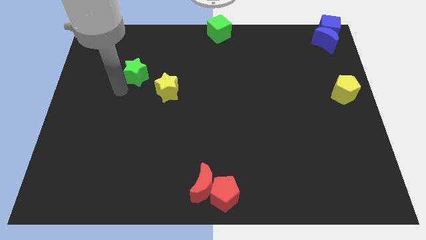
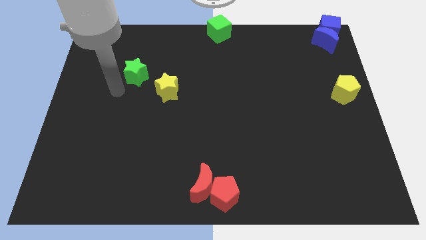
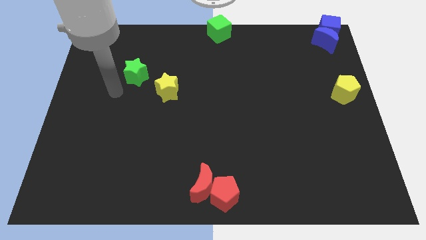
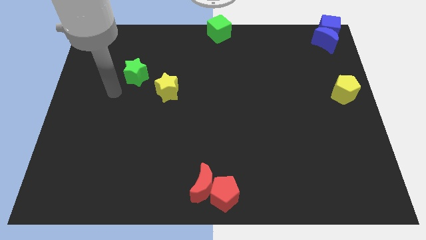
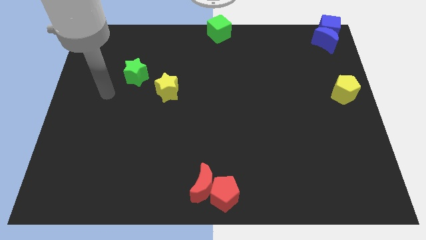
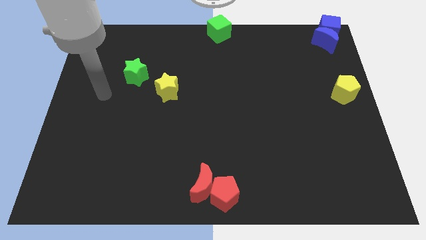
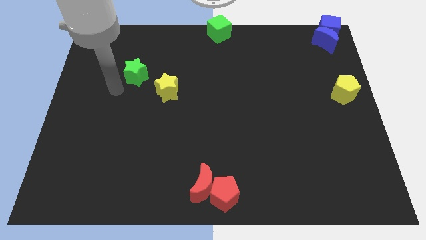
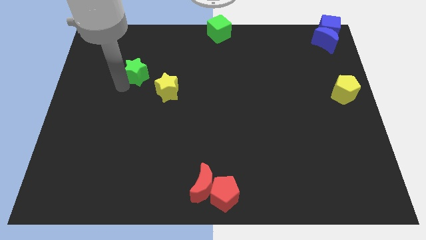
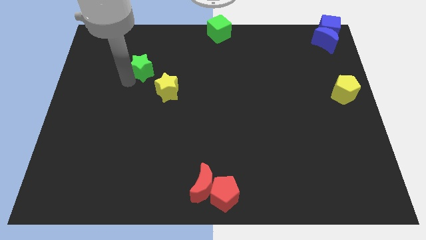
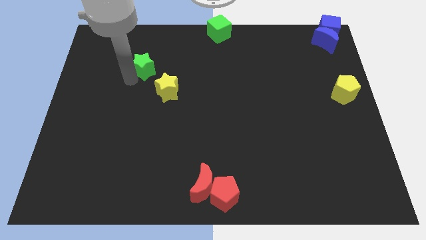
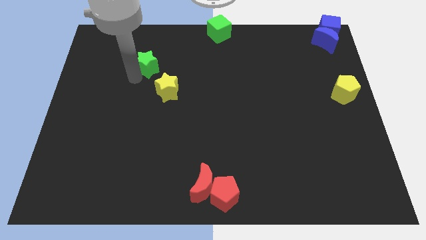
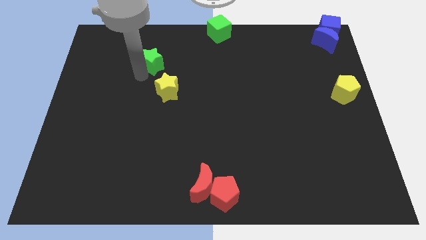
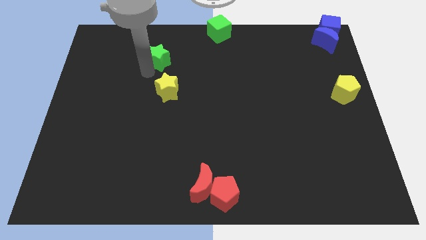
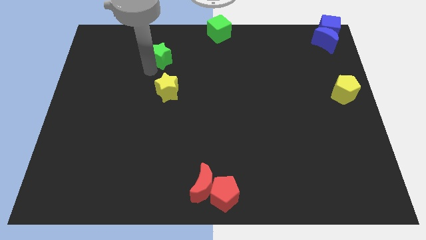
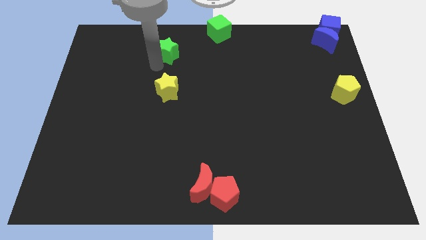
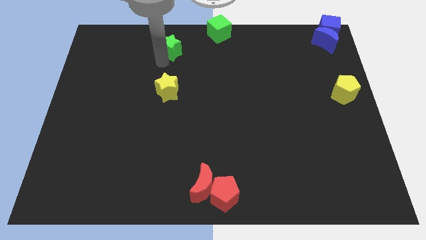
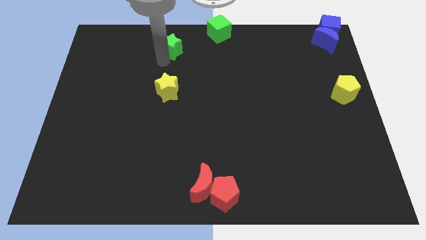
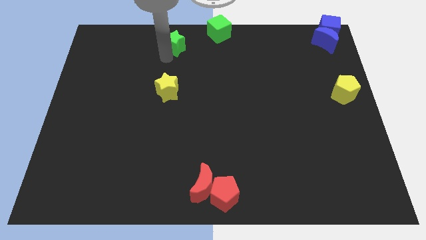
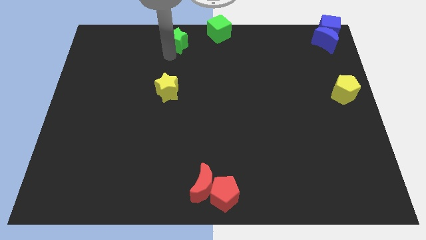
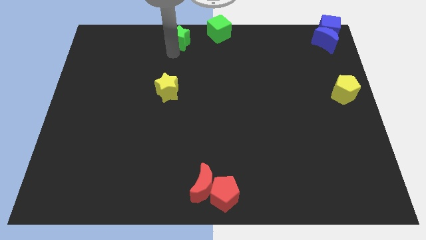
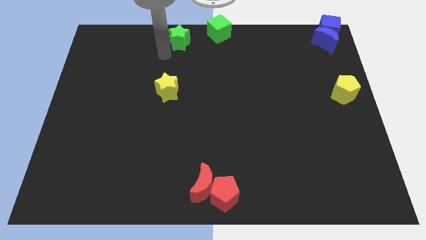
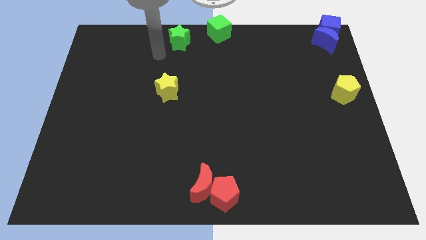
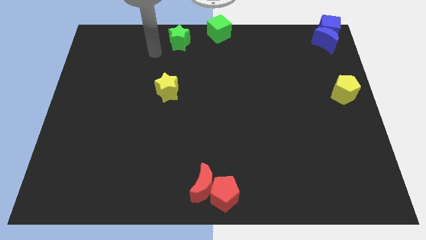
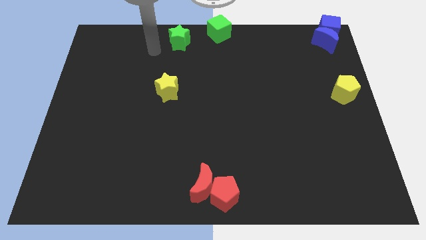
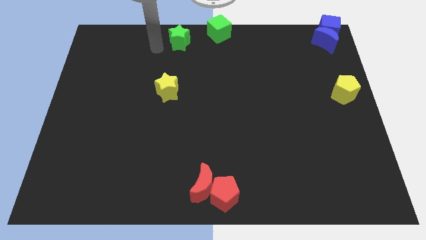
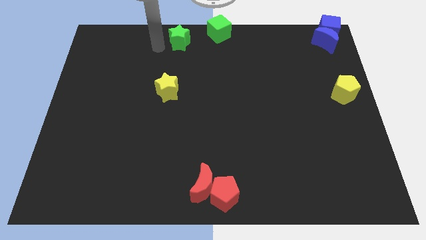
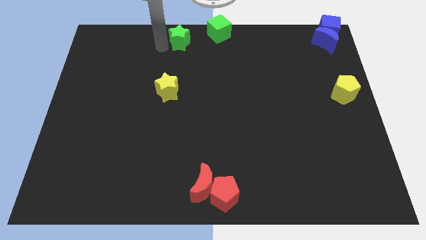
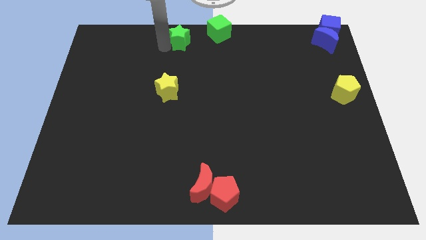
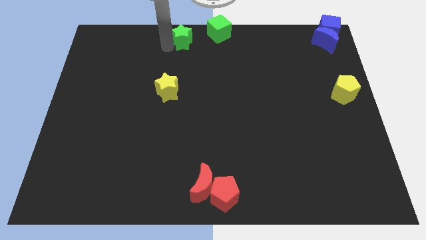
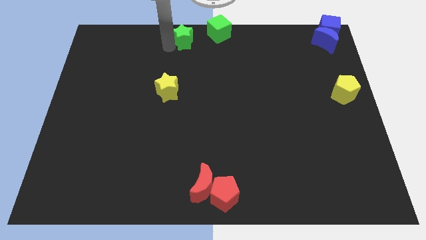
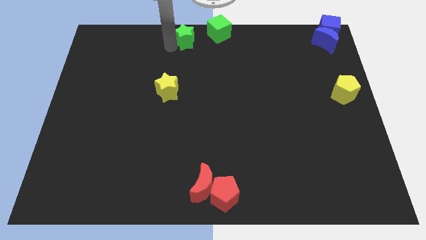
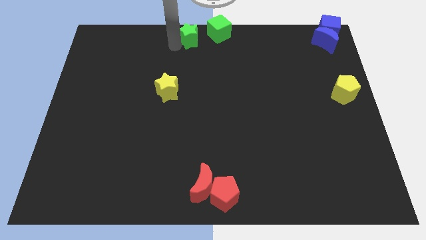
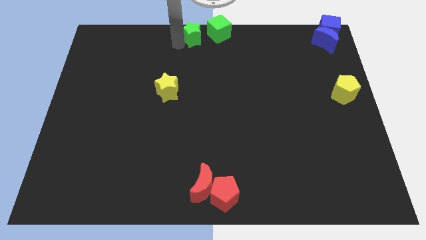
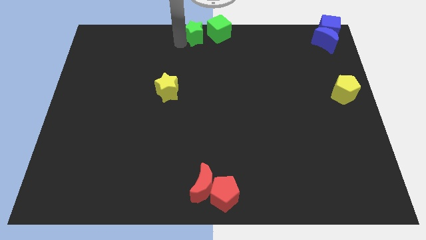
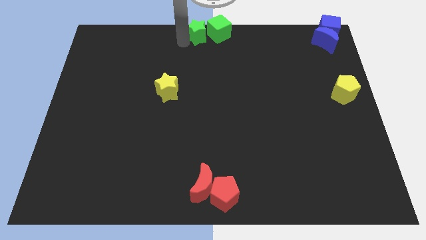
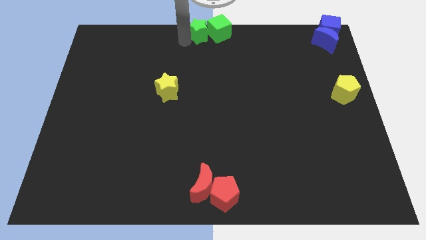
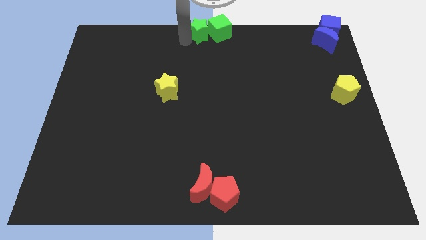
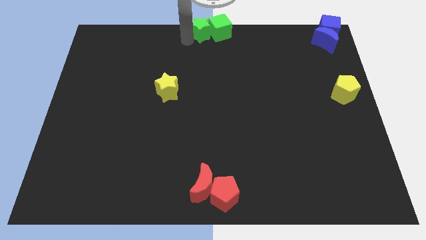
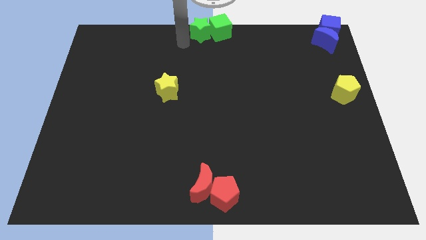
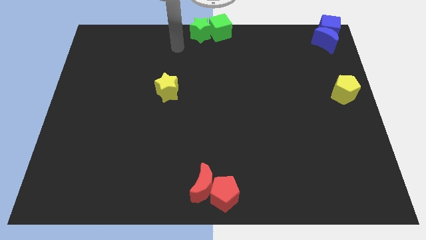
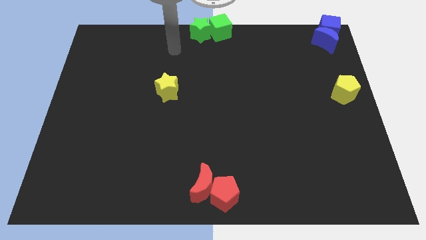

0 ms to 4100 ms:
place the green star at the top center of the board

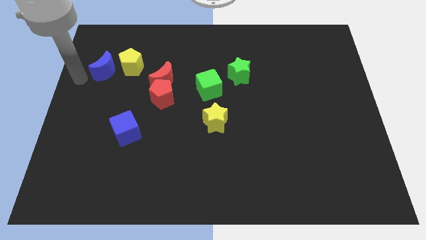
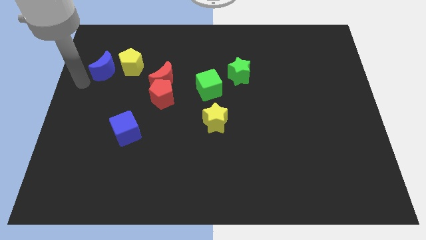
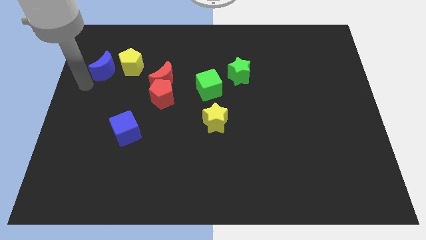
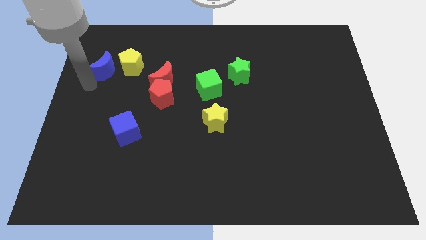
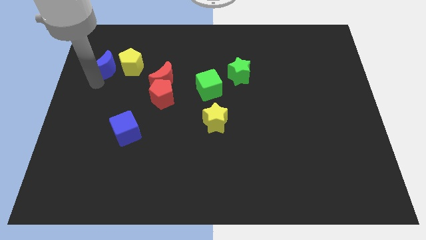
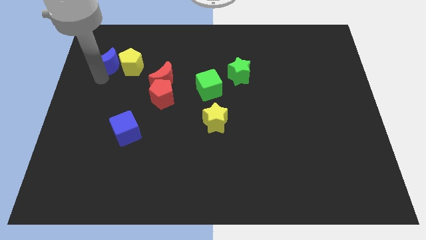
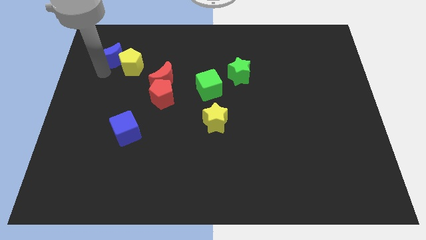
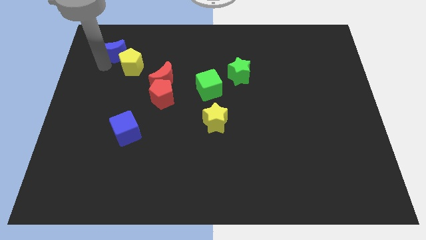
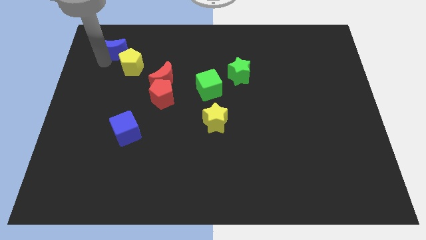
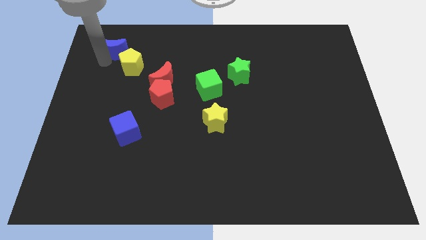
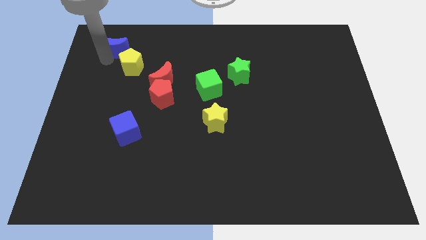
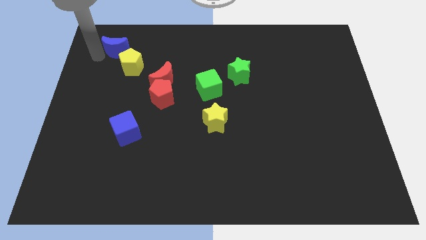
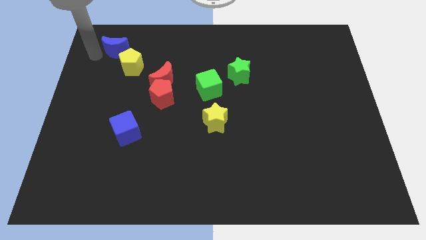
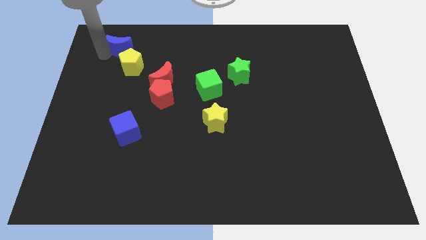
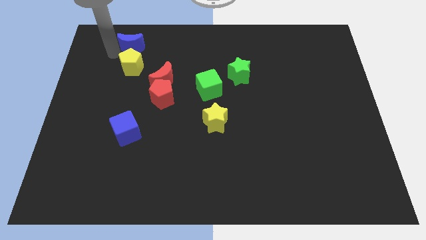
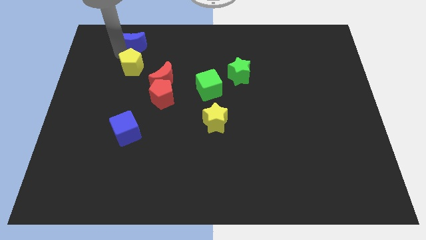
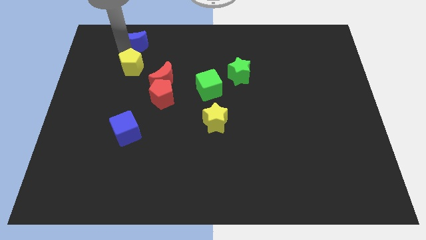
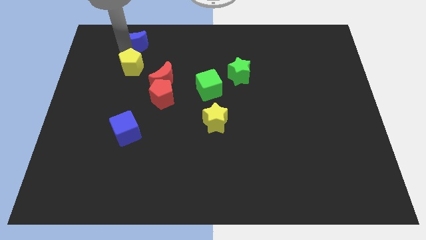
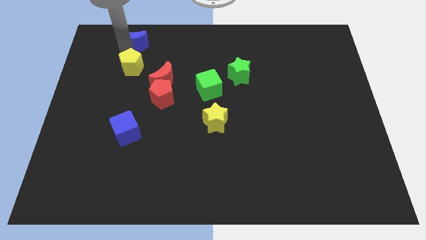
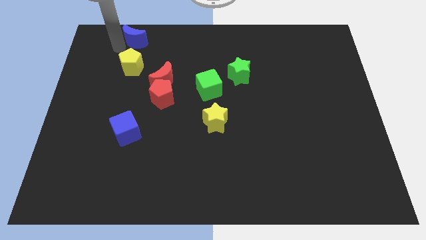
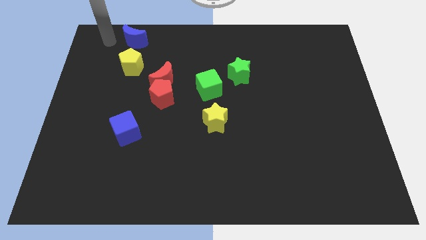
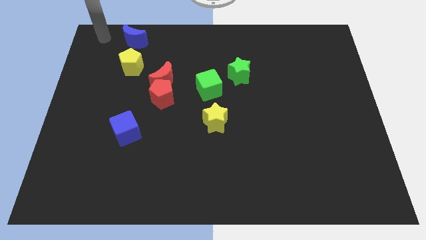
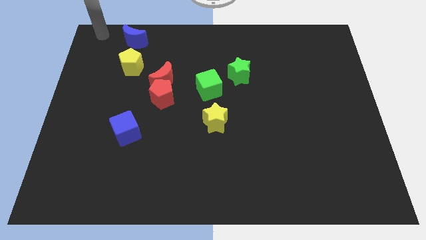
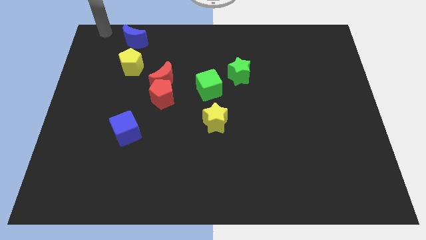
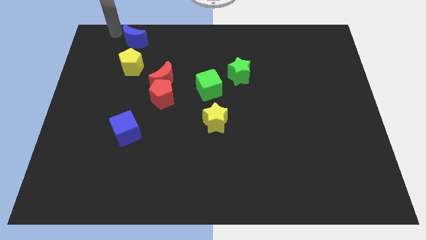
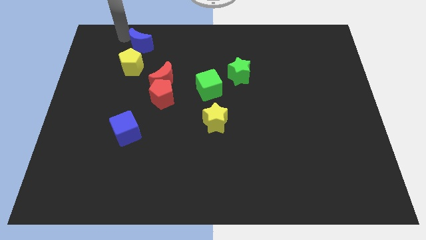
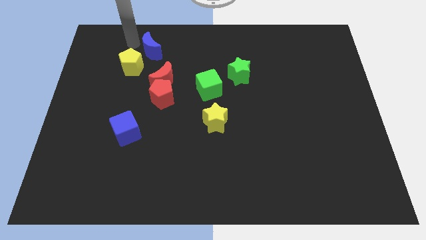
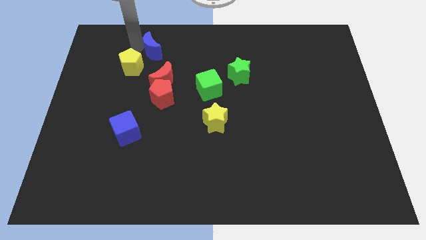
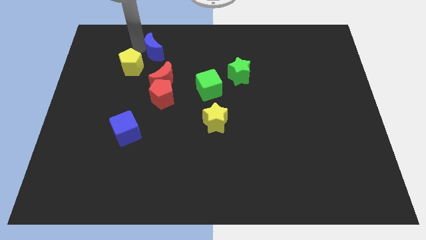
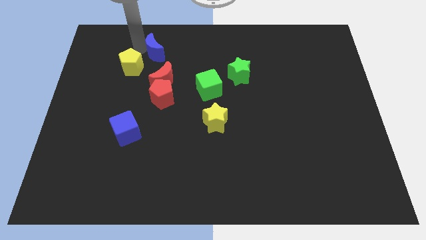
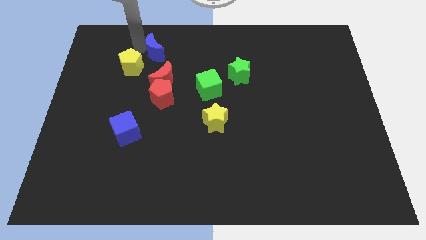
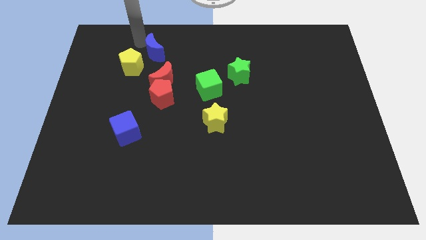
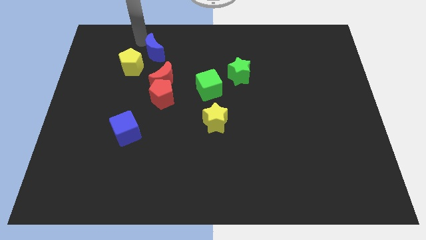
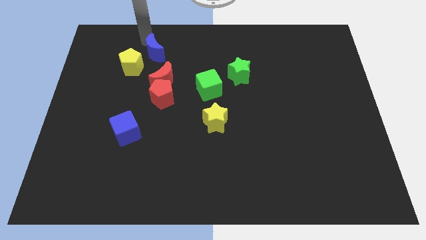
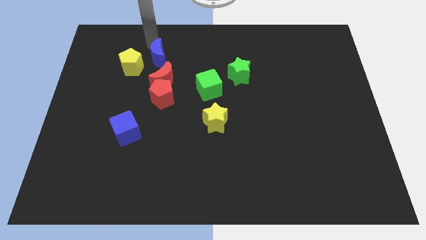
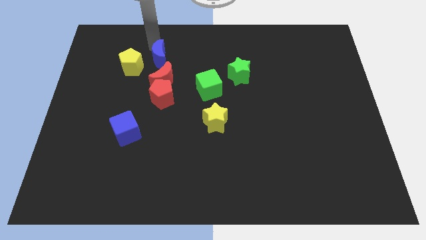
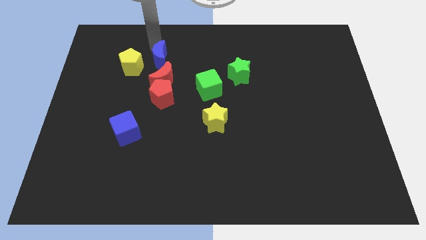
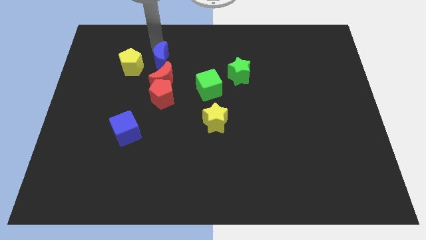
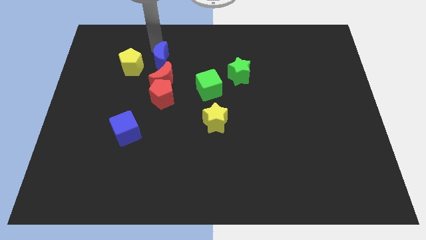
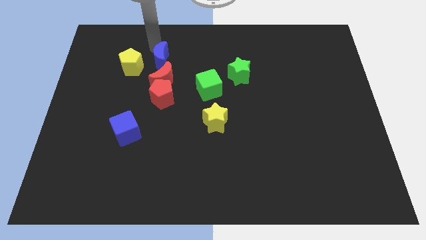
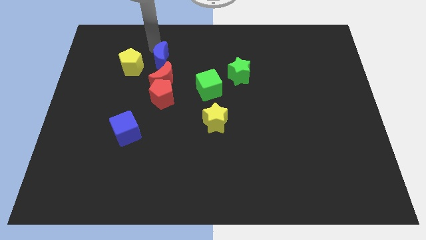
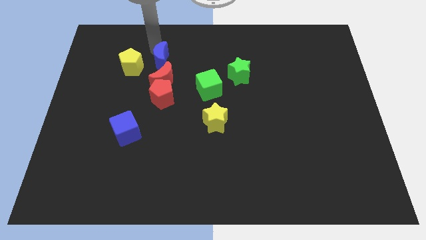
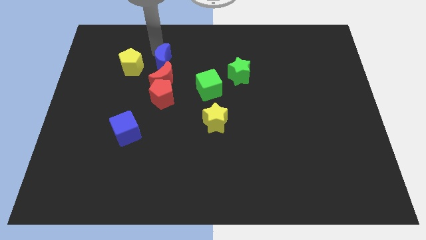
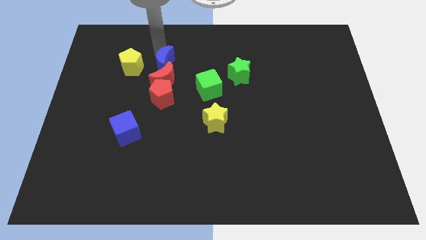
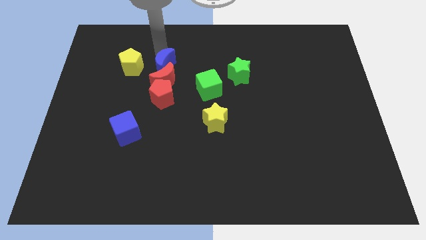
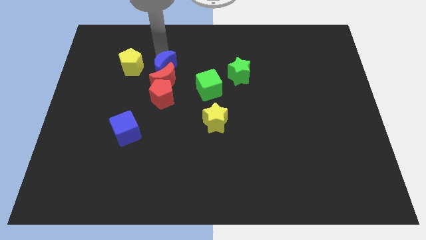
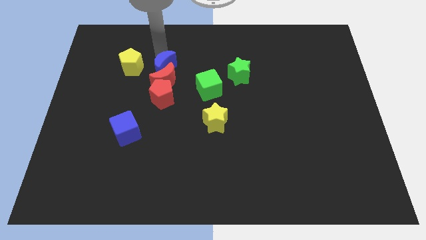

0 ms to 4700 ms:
push the blue crescent into the red crescent
